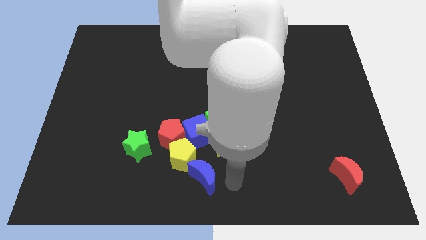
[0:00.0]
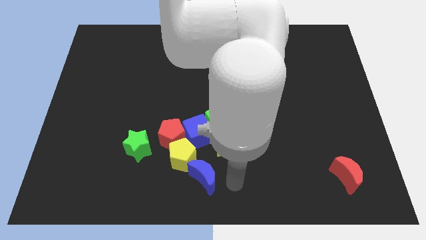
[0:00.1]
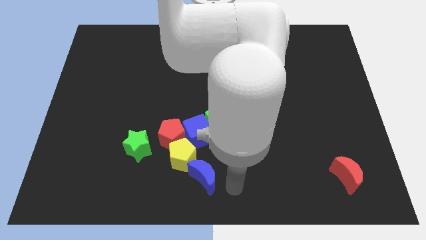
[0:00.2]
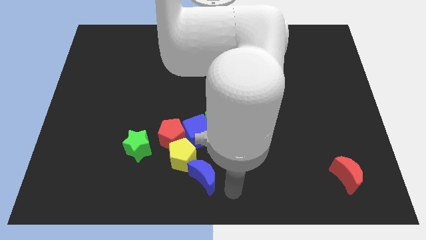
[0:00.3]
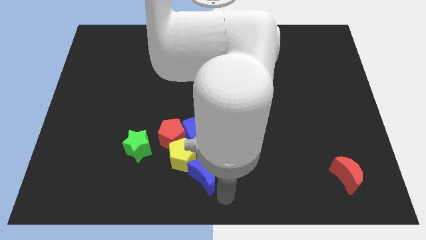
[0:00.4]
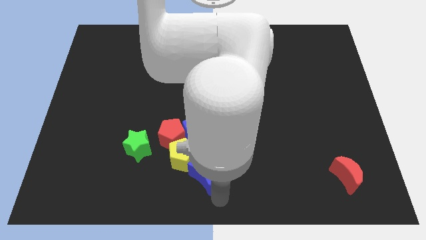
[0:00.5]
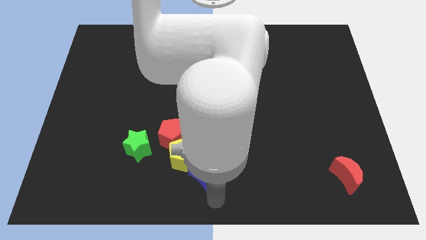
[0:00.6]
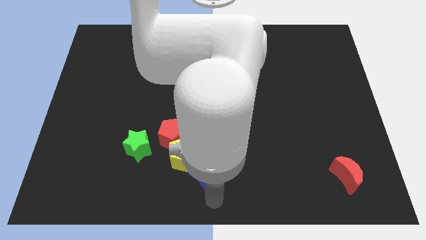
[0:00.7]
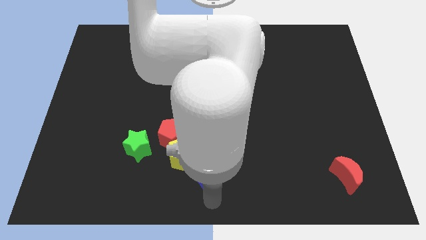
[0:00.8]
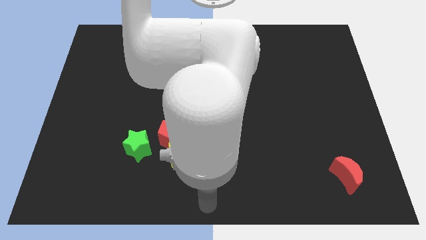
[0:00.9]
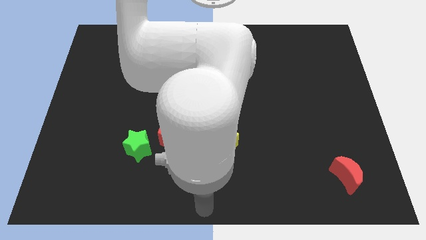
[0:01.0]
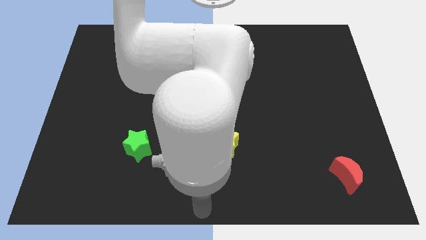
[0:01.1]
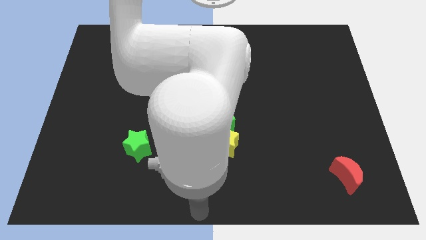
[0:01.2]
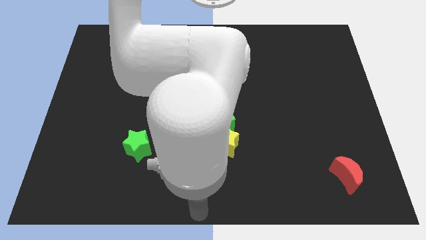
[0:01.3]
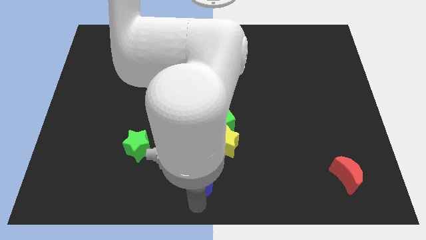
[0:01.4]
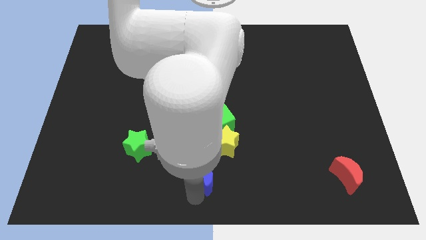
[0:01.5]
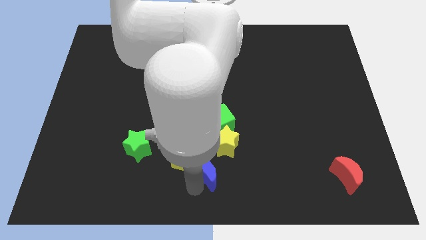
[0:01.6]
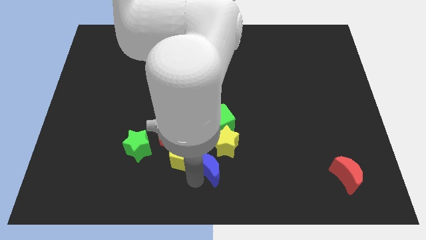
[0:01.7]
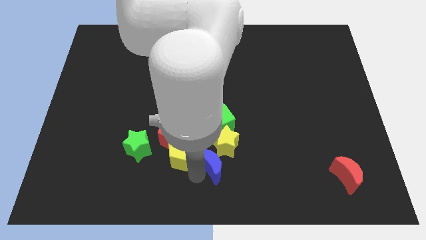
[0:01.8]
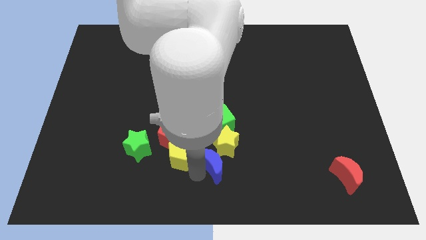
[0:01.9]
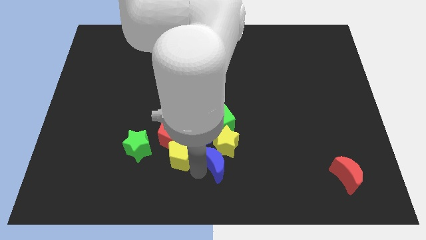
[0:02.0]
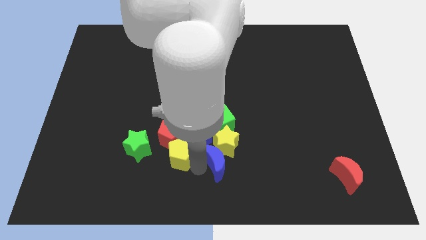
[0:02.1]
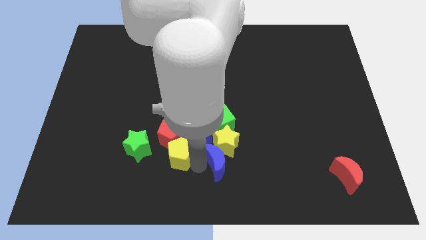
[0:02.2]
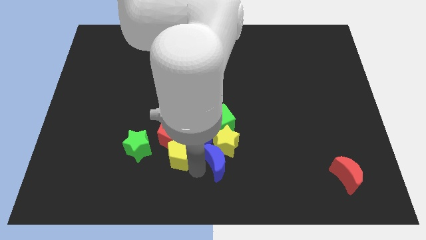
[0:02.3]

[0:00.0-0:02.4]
push the blue crescent into the group of blocks

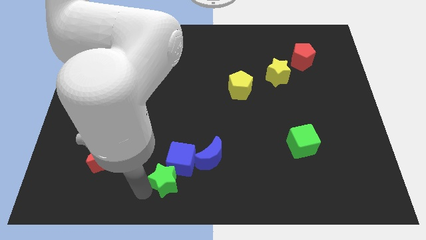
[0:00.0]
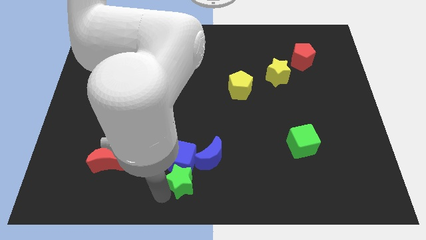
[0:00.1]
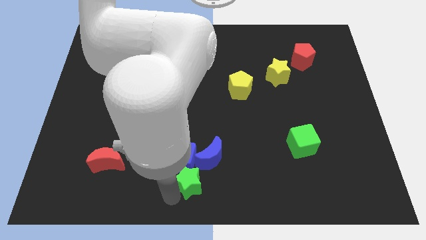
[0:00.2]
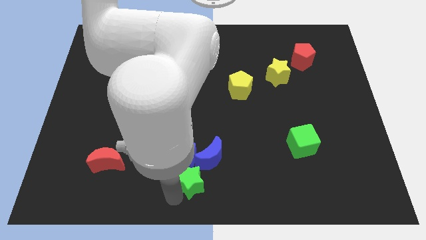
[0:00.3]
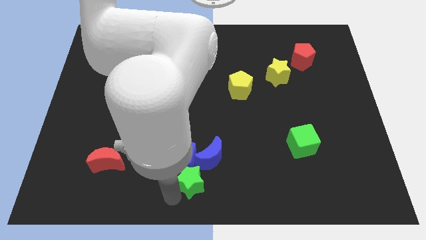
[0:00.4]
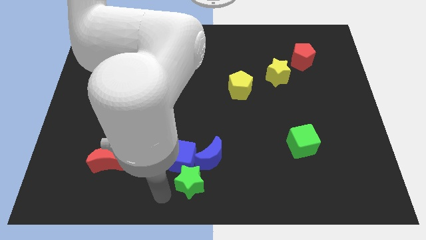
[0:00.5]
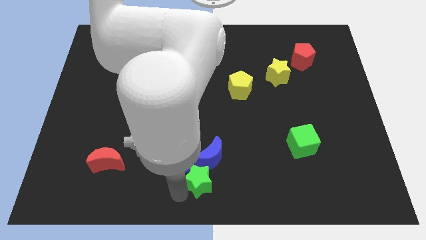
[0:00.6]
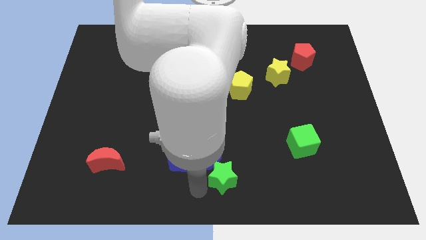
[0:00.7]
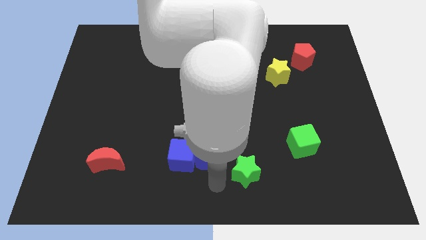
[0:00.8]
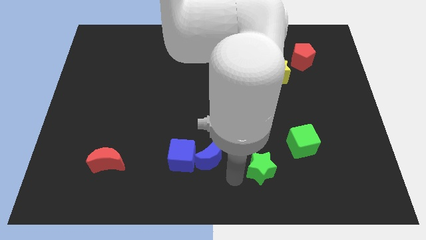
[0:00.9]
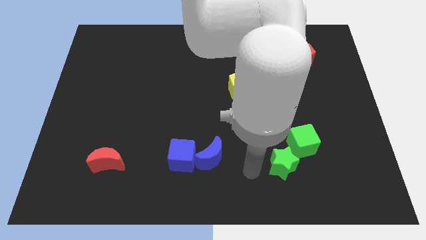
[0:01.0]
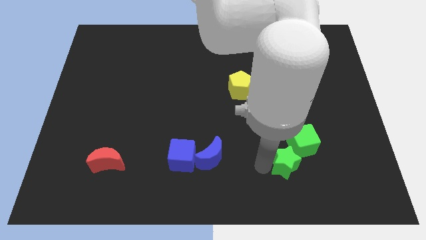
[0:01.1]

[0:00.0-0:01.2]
move the green star left below the green cube

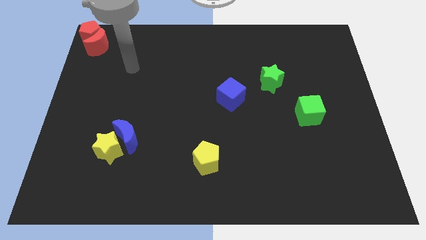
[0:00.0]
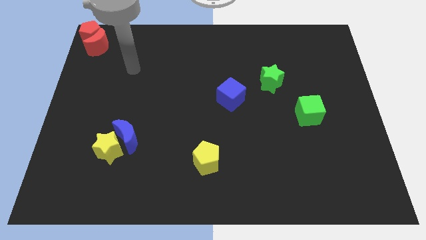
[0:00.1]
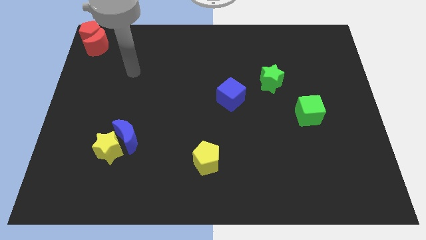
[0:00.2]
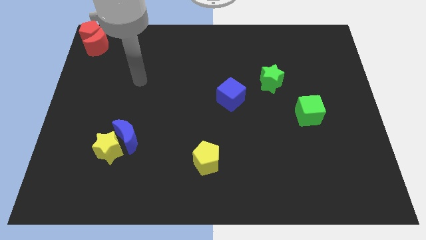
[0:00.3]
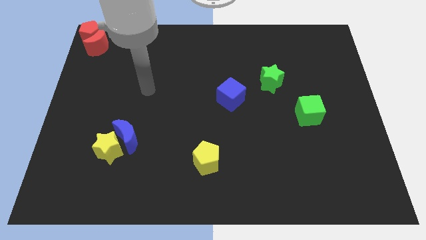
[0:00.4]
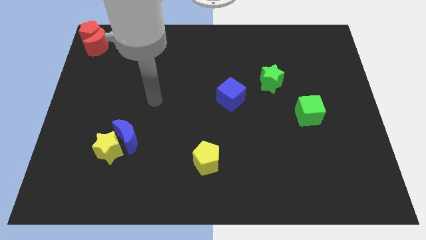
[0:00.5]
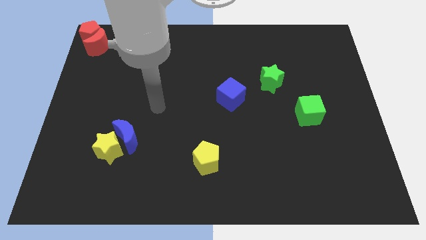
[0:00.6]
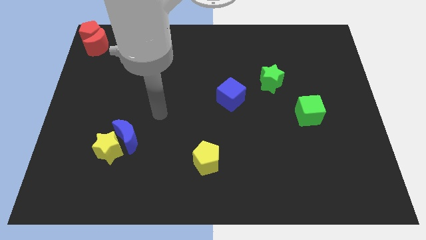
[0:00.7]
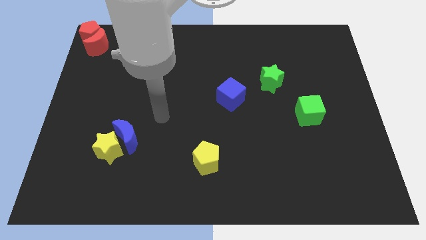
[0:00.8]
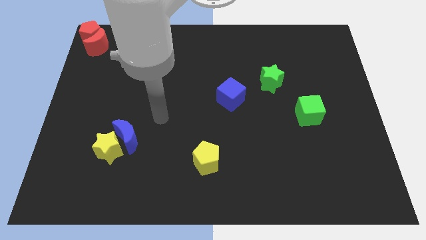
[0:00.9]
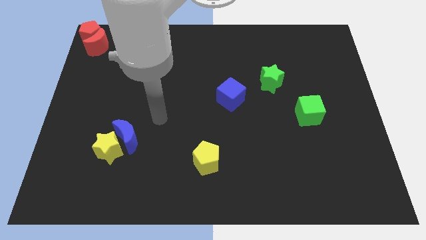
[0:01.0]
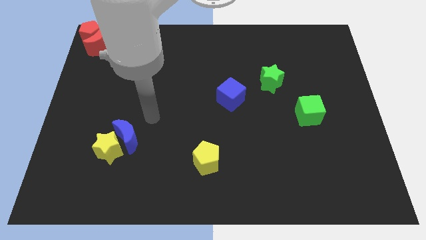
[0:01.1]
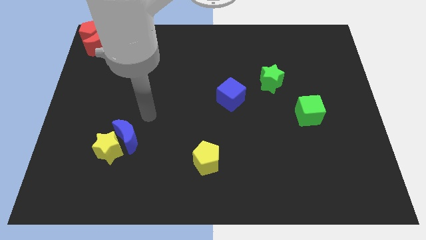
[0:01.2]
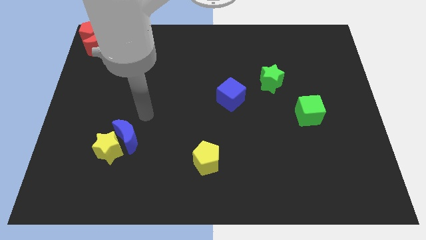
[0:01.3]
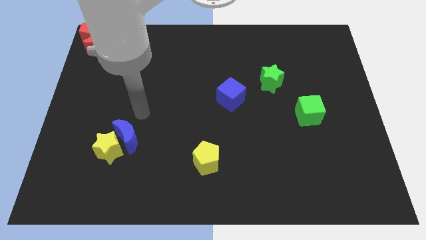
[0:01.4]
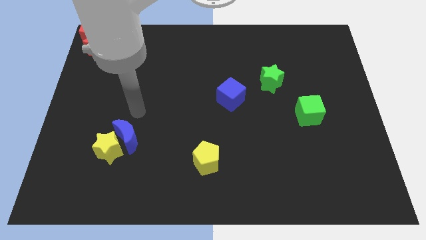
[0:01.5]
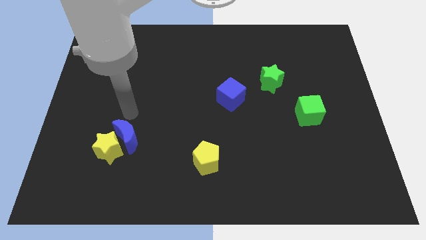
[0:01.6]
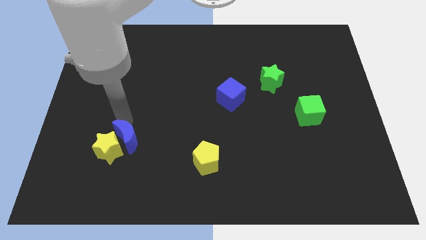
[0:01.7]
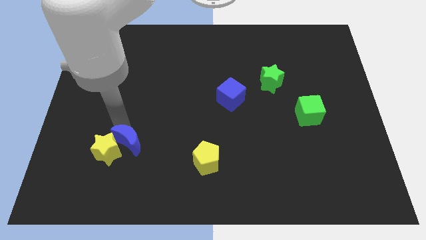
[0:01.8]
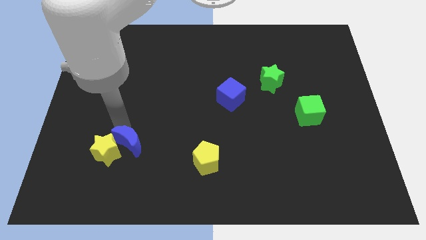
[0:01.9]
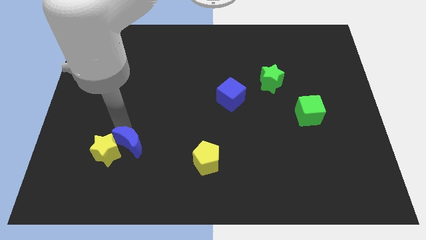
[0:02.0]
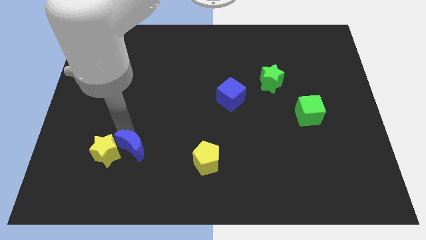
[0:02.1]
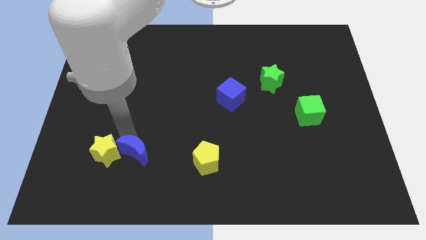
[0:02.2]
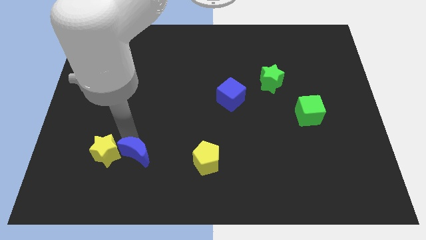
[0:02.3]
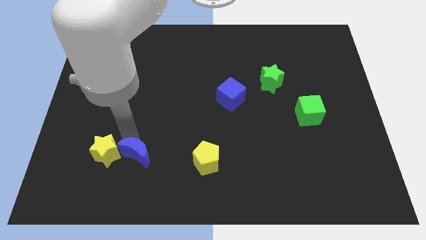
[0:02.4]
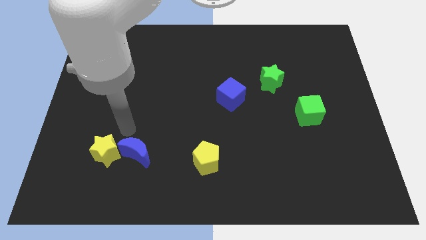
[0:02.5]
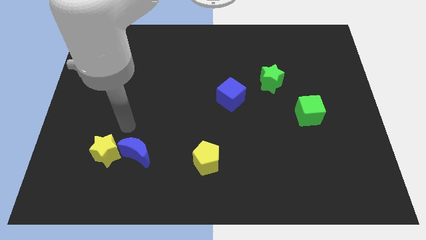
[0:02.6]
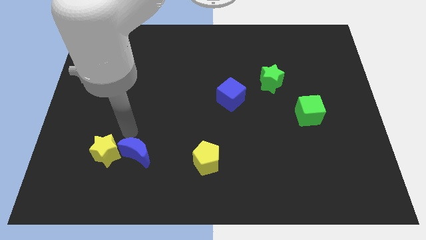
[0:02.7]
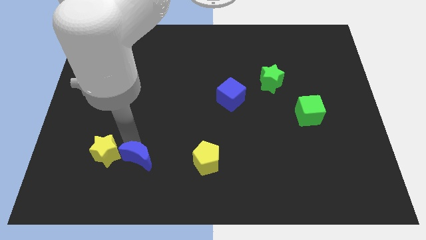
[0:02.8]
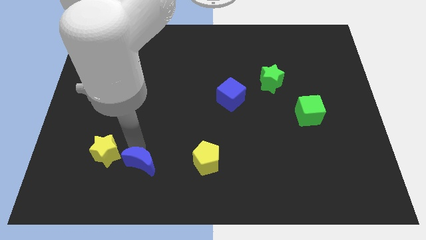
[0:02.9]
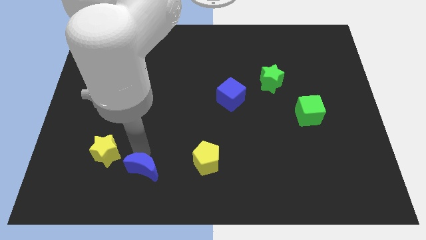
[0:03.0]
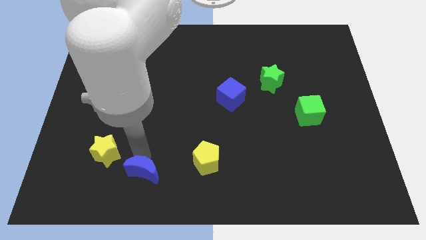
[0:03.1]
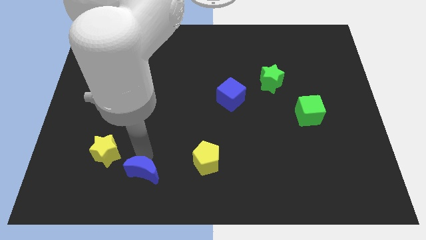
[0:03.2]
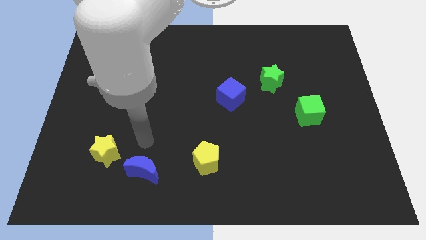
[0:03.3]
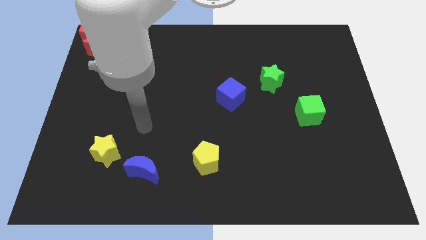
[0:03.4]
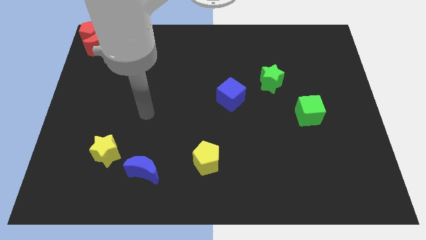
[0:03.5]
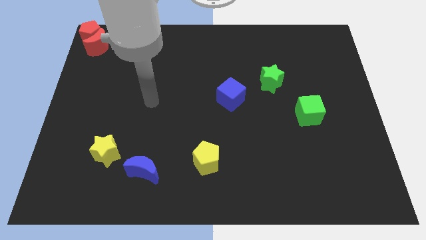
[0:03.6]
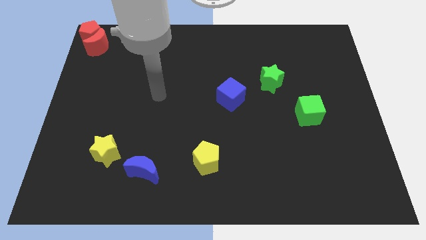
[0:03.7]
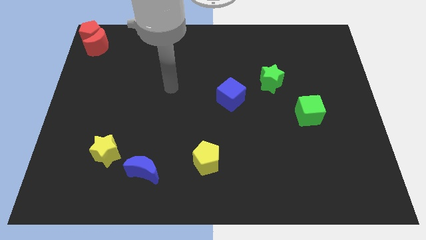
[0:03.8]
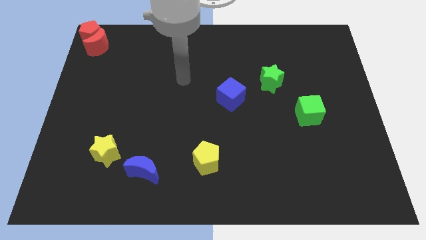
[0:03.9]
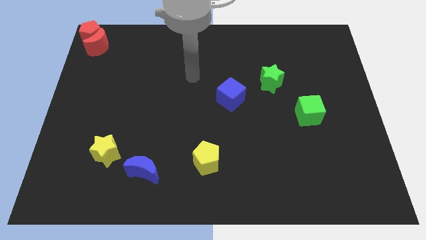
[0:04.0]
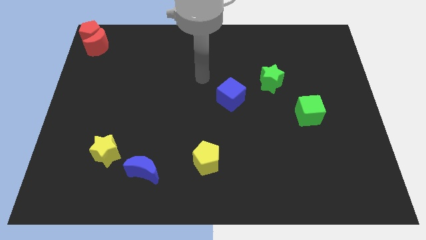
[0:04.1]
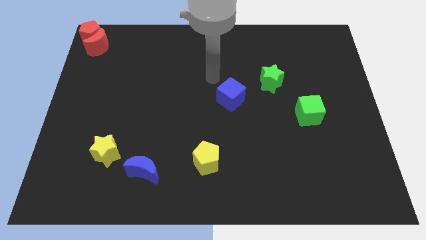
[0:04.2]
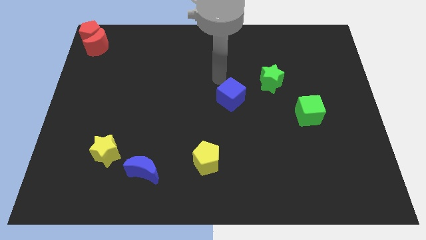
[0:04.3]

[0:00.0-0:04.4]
push the blue crescent slightly to the bottom

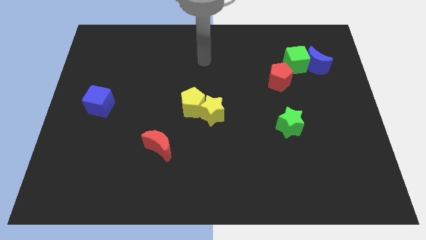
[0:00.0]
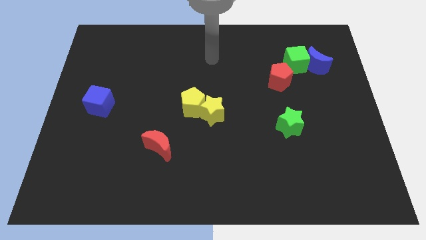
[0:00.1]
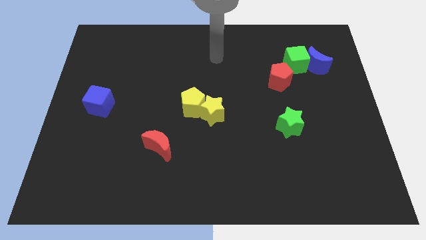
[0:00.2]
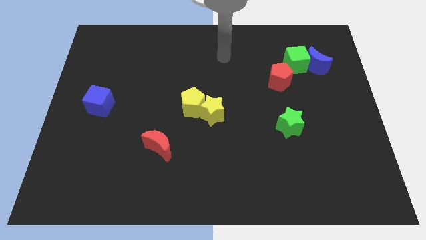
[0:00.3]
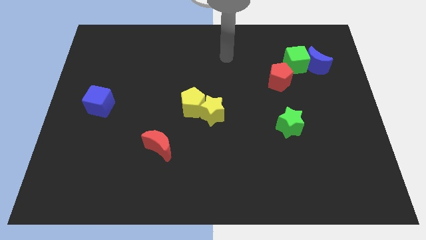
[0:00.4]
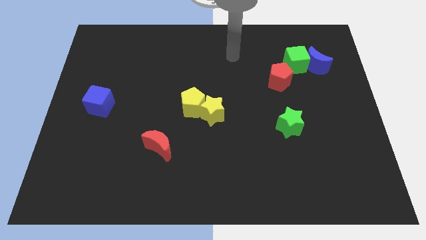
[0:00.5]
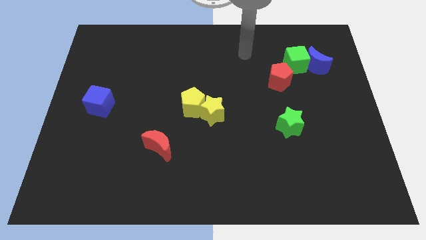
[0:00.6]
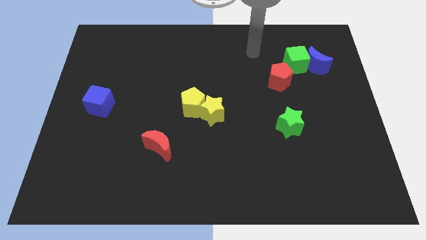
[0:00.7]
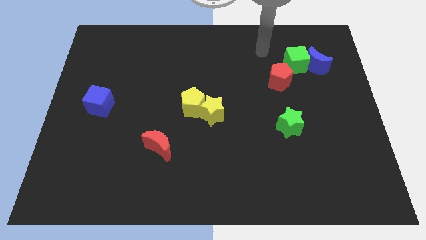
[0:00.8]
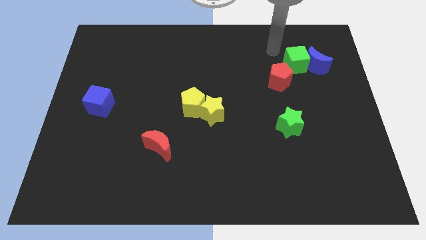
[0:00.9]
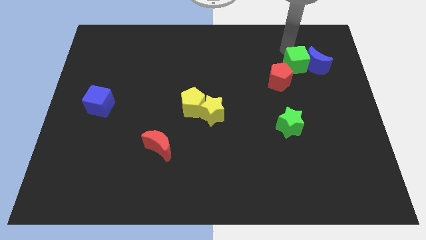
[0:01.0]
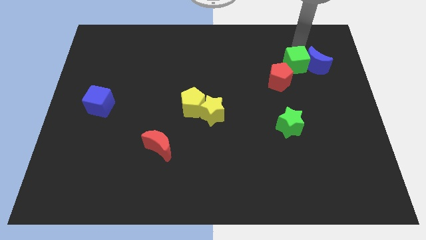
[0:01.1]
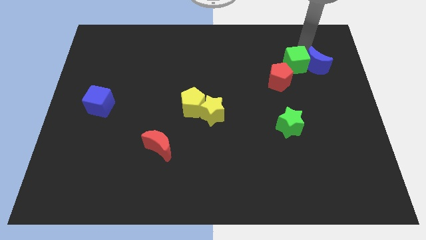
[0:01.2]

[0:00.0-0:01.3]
move close to the green cube
